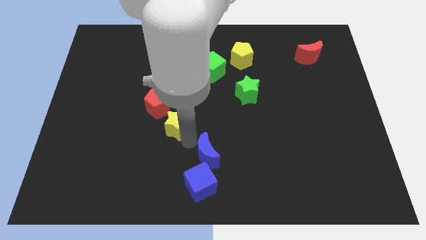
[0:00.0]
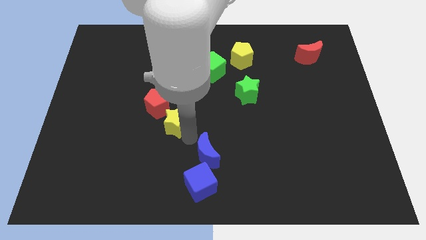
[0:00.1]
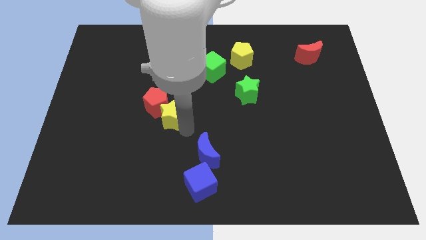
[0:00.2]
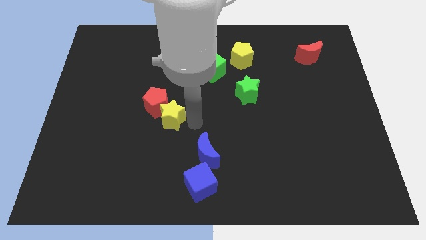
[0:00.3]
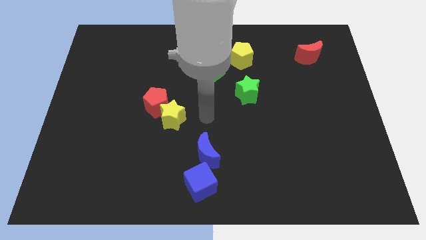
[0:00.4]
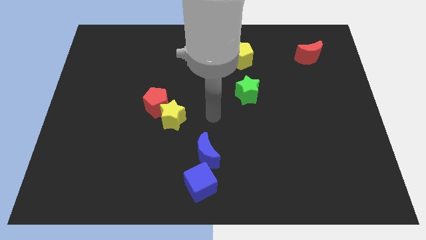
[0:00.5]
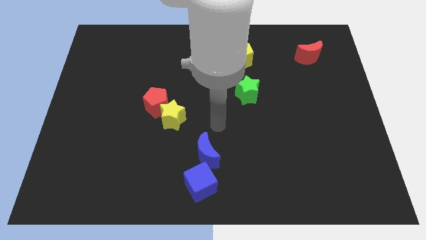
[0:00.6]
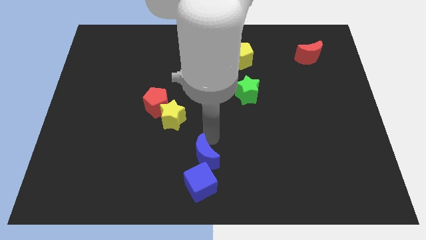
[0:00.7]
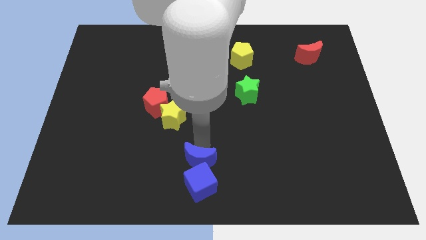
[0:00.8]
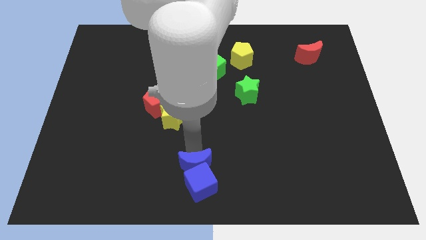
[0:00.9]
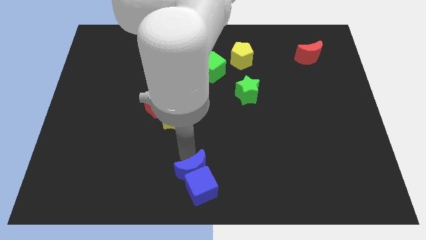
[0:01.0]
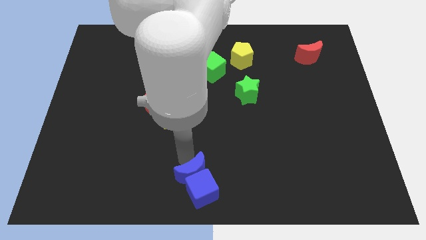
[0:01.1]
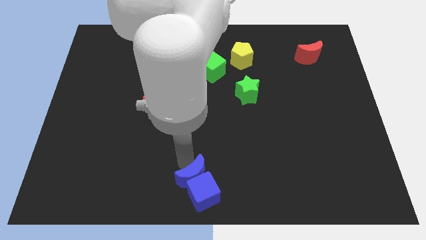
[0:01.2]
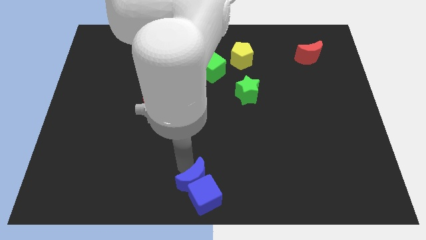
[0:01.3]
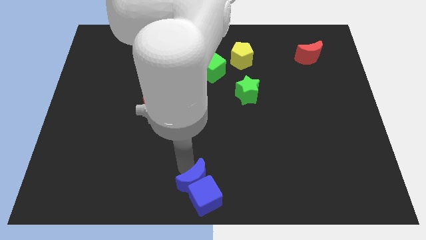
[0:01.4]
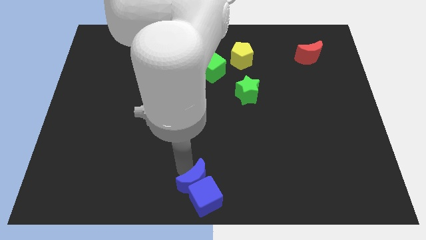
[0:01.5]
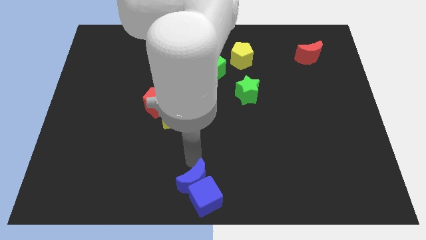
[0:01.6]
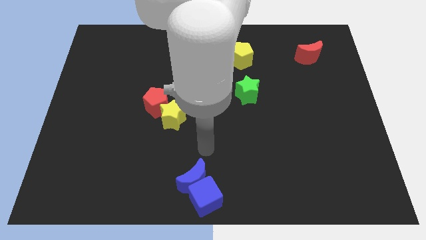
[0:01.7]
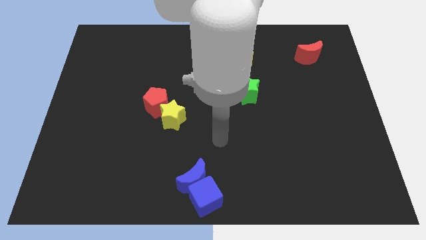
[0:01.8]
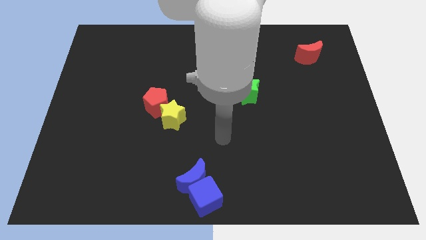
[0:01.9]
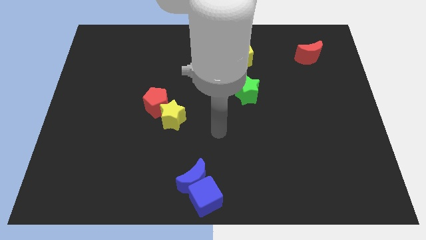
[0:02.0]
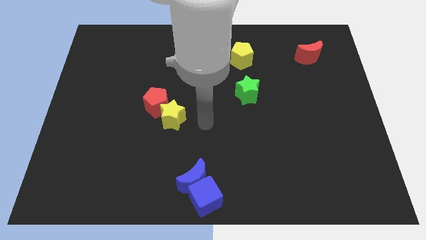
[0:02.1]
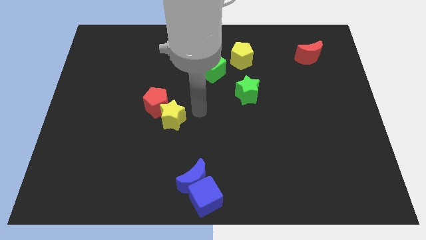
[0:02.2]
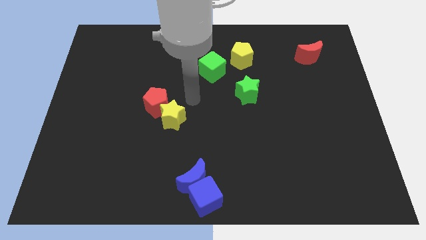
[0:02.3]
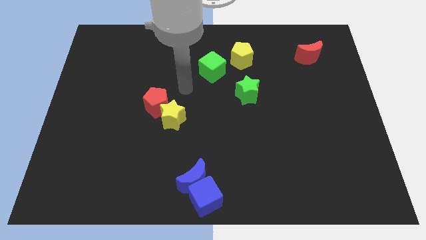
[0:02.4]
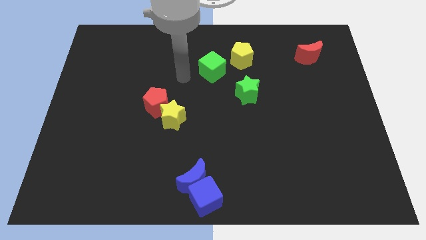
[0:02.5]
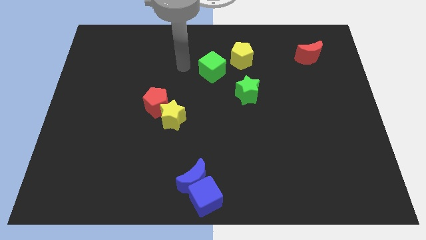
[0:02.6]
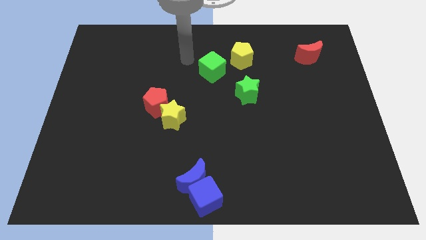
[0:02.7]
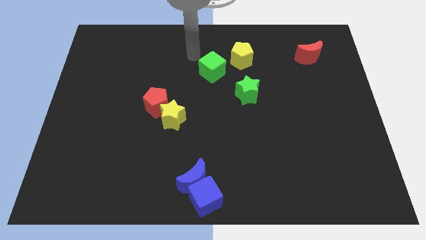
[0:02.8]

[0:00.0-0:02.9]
push the blue moon and blue cube towards the bottom center of the board

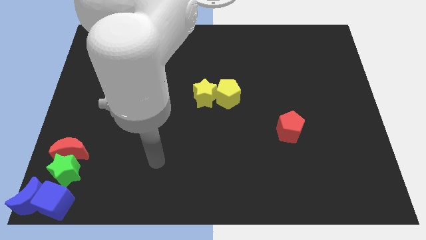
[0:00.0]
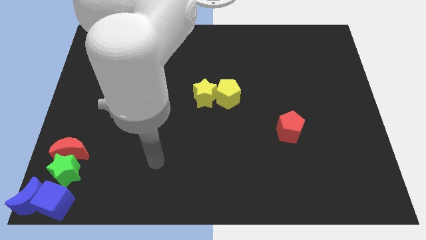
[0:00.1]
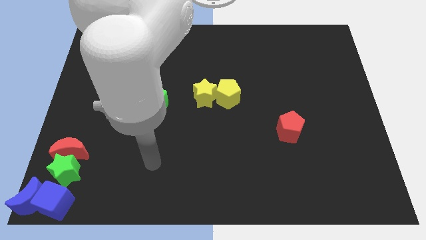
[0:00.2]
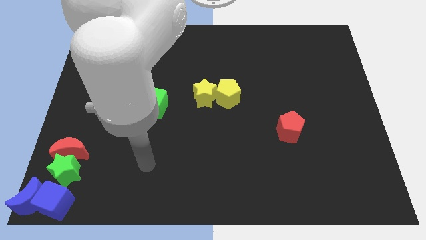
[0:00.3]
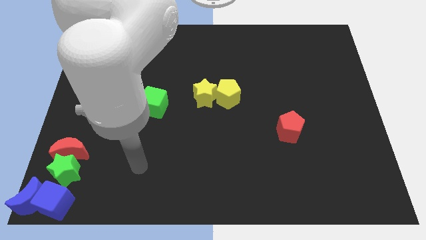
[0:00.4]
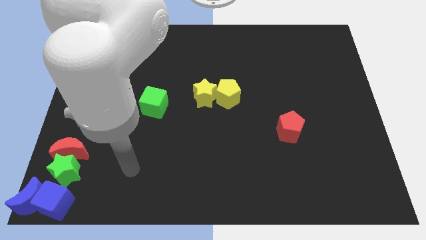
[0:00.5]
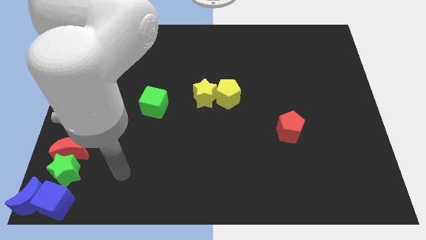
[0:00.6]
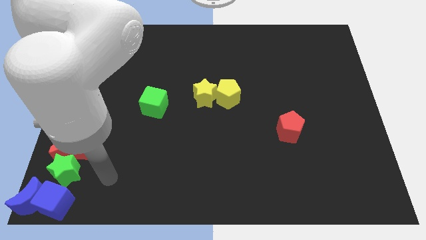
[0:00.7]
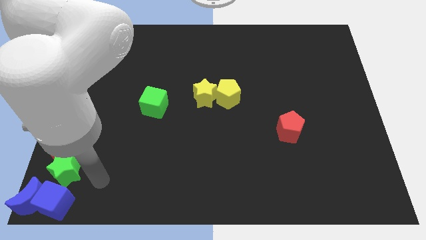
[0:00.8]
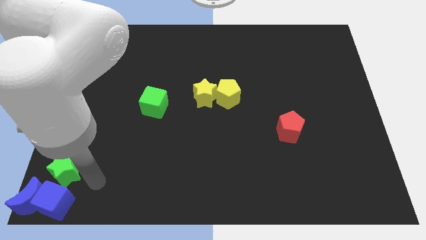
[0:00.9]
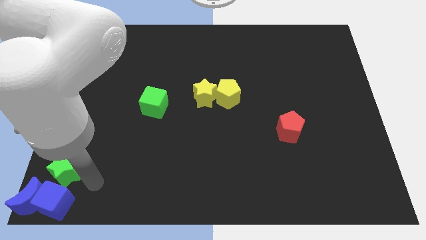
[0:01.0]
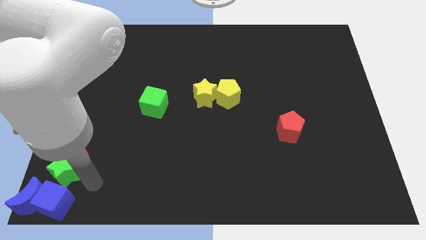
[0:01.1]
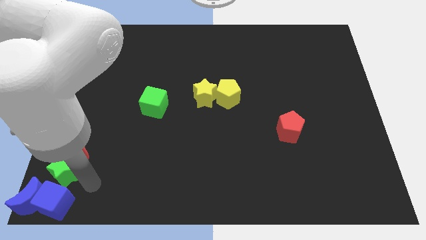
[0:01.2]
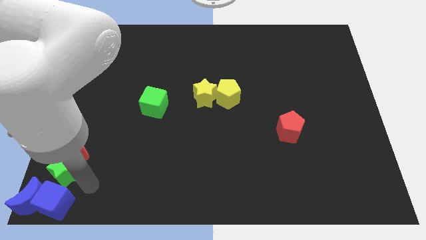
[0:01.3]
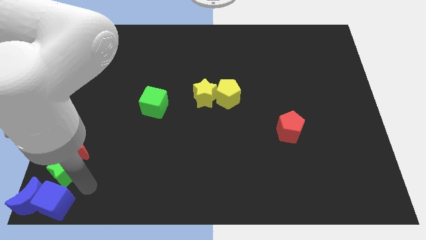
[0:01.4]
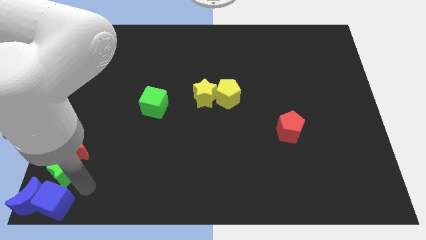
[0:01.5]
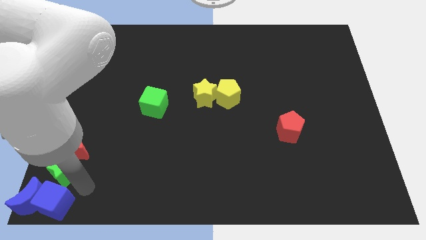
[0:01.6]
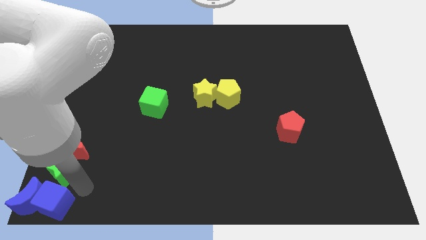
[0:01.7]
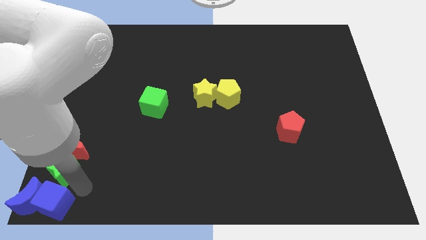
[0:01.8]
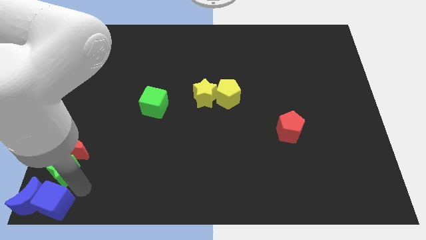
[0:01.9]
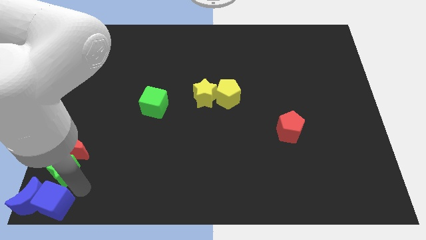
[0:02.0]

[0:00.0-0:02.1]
go near the blue cube

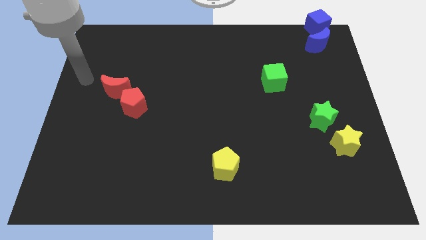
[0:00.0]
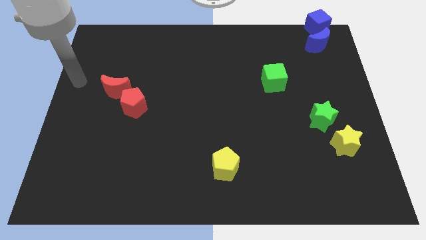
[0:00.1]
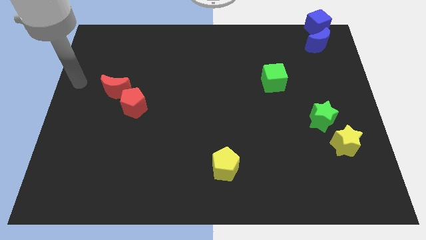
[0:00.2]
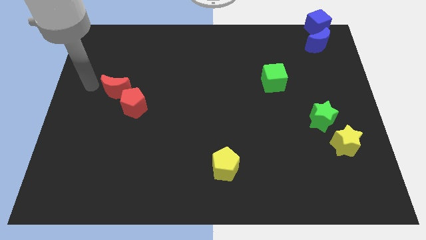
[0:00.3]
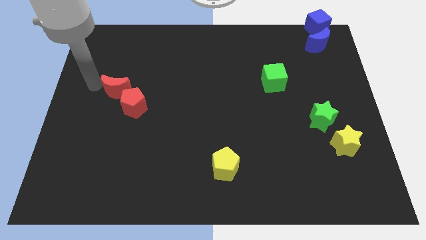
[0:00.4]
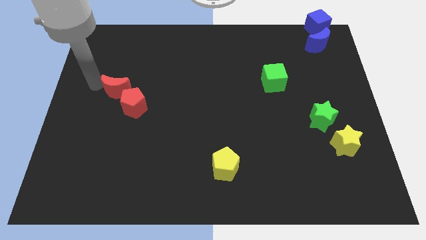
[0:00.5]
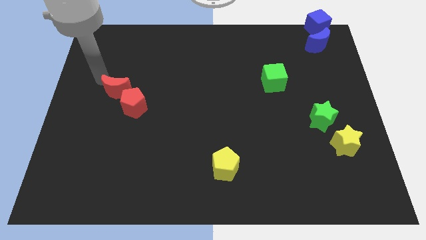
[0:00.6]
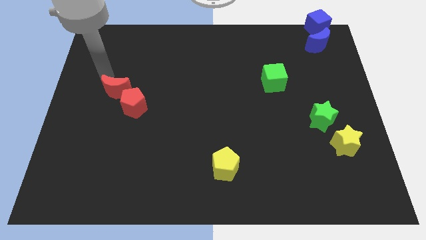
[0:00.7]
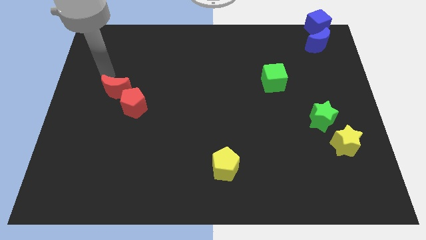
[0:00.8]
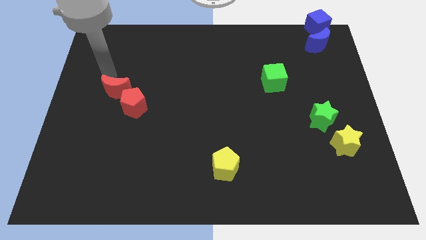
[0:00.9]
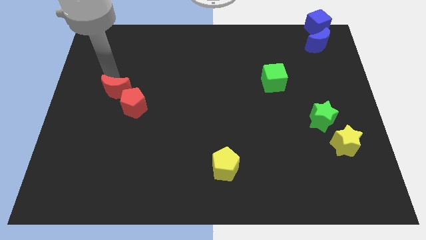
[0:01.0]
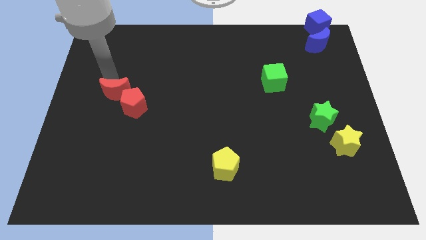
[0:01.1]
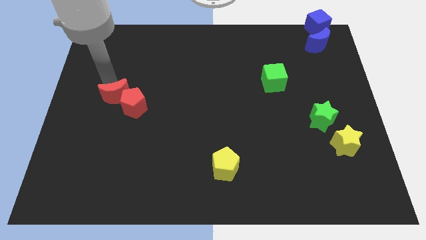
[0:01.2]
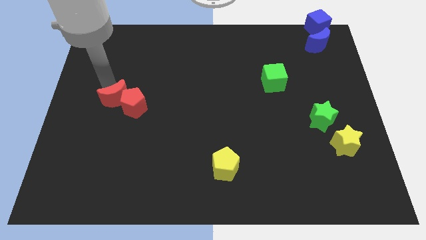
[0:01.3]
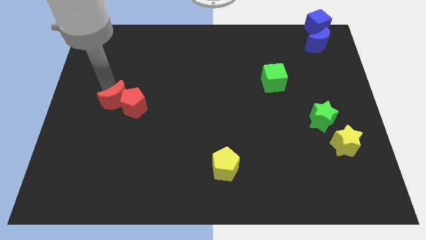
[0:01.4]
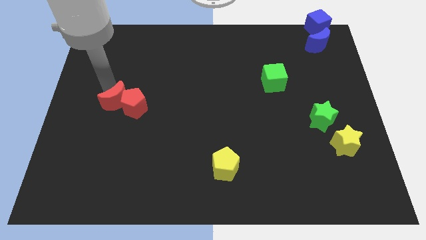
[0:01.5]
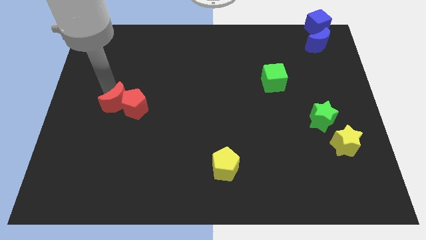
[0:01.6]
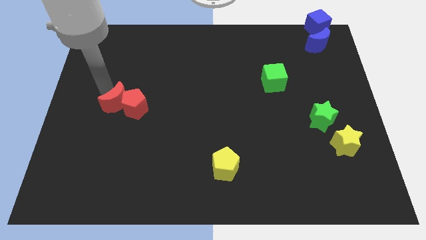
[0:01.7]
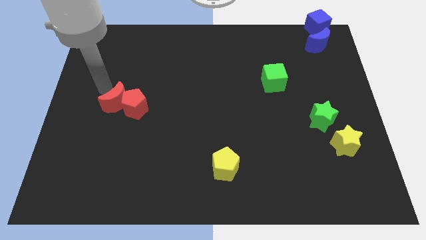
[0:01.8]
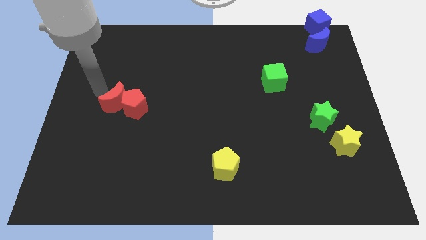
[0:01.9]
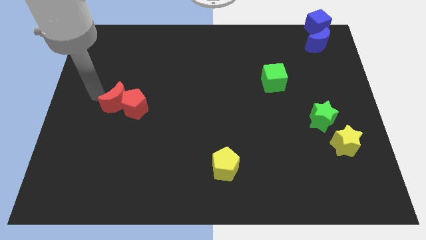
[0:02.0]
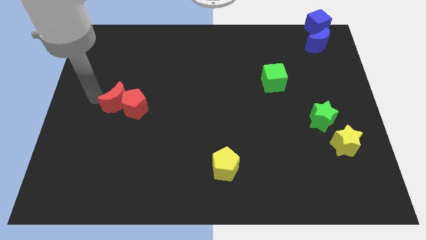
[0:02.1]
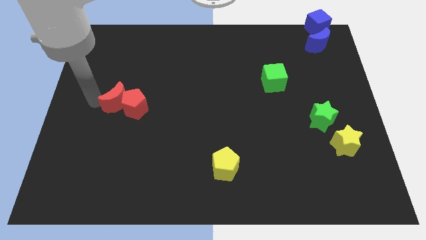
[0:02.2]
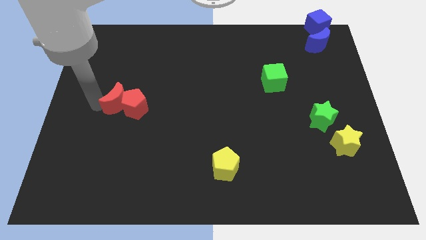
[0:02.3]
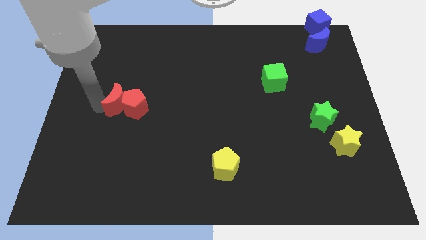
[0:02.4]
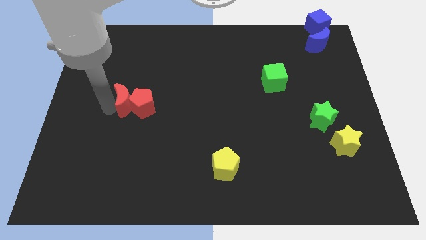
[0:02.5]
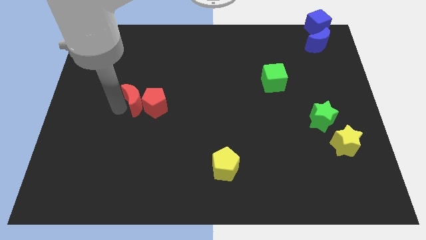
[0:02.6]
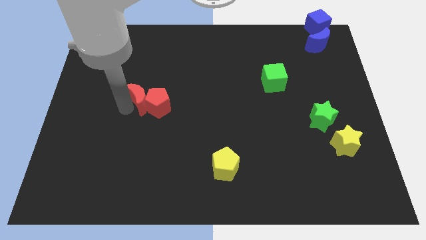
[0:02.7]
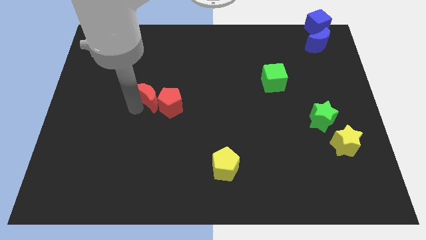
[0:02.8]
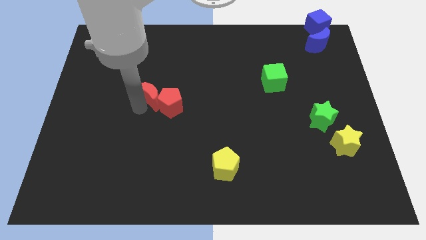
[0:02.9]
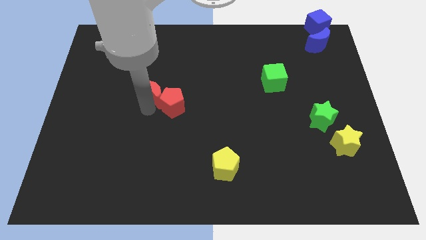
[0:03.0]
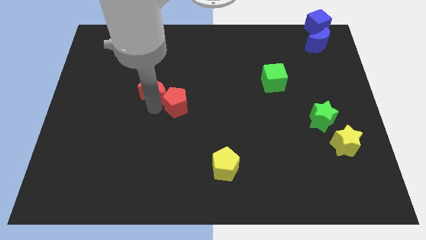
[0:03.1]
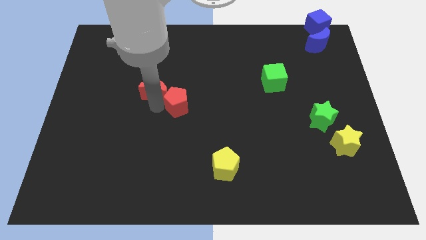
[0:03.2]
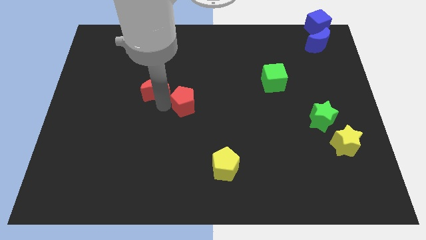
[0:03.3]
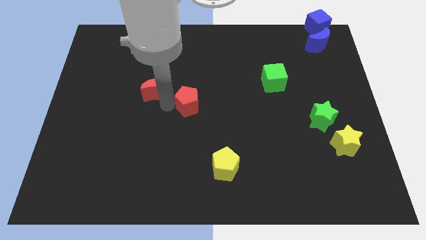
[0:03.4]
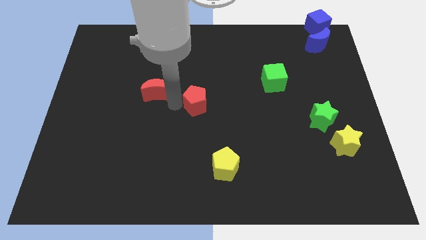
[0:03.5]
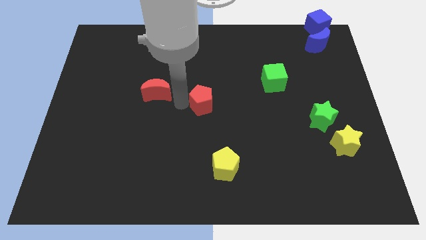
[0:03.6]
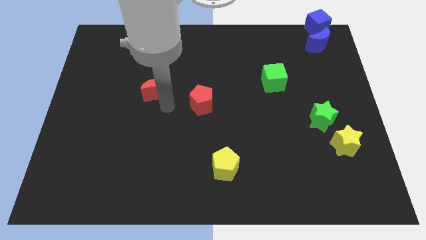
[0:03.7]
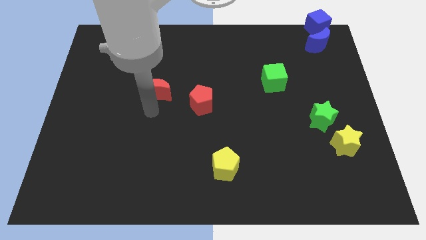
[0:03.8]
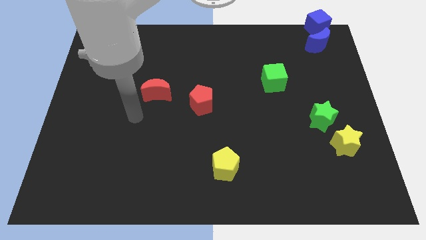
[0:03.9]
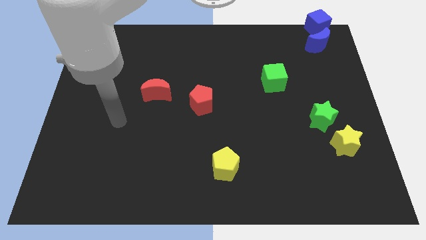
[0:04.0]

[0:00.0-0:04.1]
separate red pentagon and red crescent
